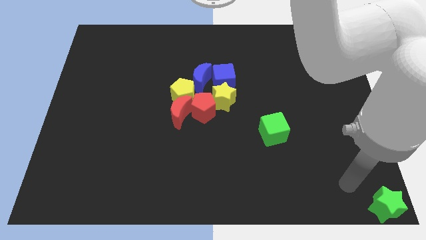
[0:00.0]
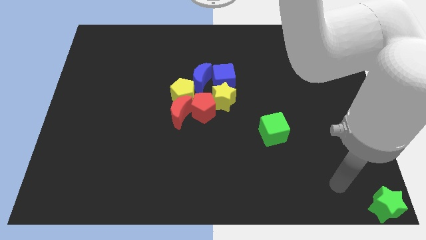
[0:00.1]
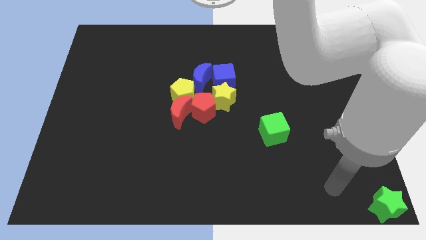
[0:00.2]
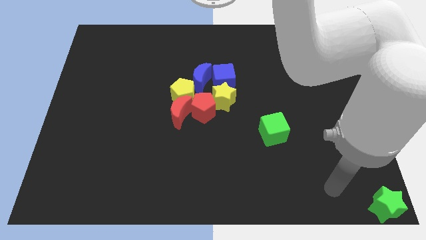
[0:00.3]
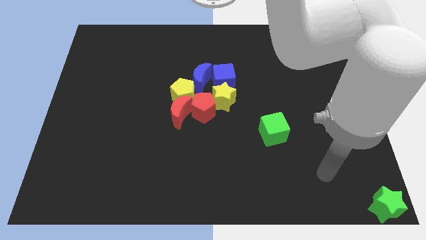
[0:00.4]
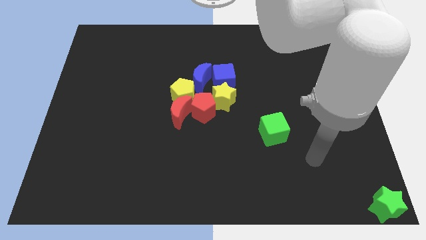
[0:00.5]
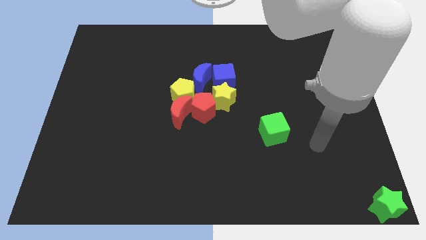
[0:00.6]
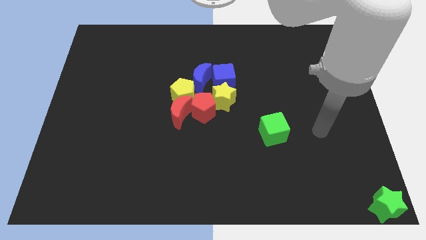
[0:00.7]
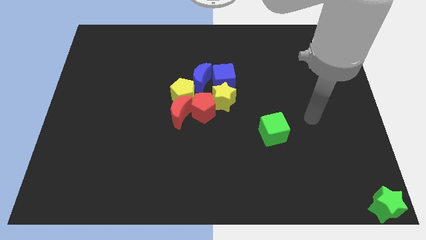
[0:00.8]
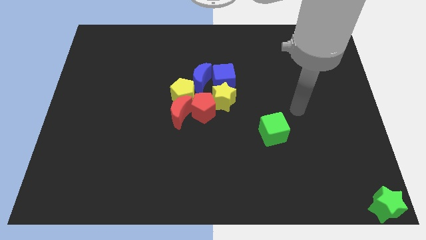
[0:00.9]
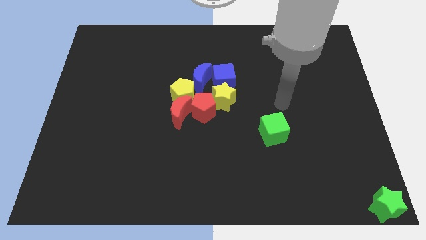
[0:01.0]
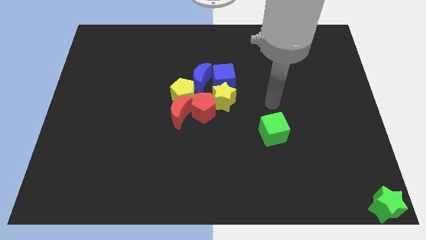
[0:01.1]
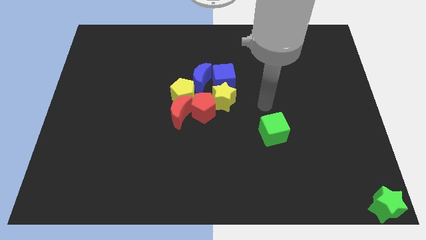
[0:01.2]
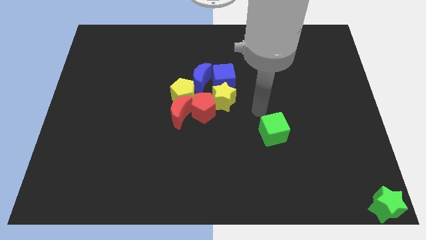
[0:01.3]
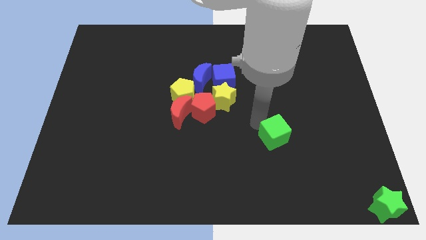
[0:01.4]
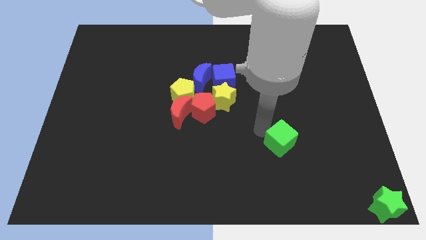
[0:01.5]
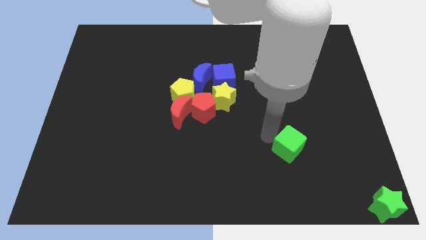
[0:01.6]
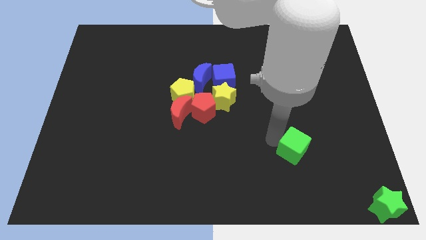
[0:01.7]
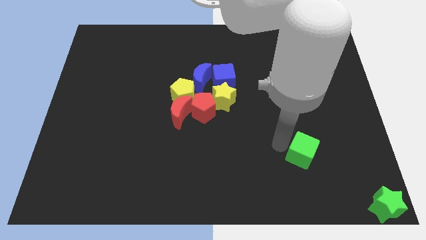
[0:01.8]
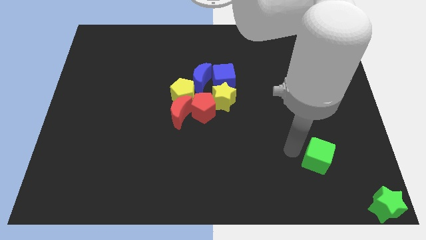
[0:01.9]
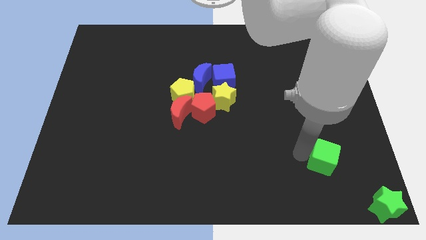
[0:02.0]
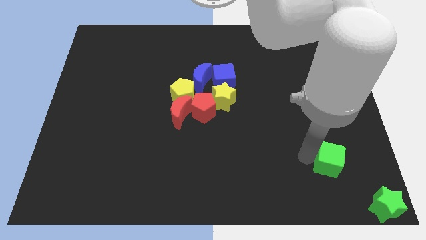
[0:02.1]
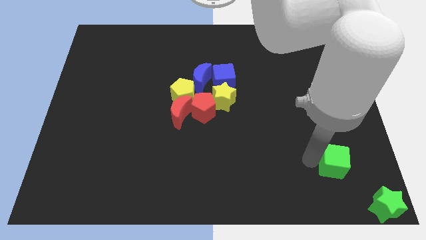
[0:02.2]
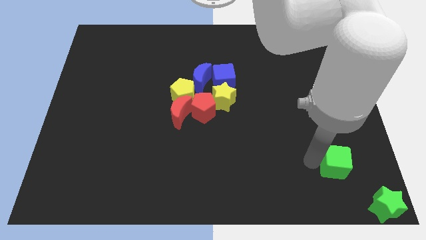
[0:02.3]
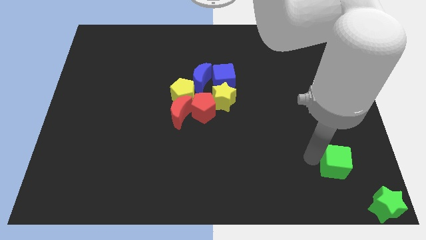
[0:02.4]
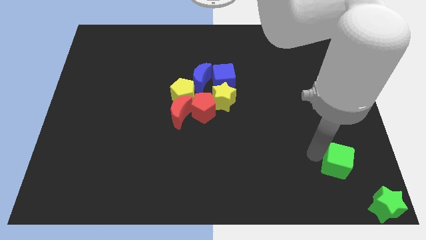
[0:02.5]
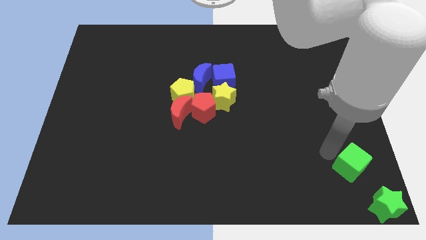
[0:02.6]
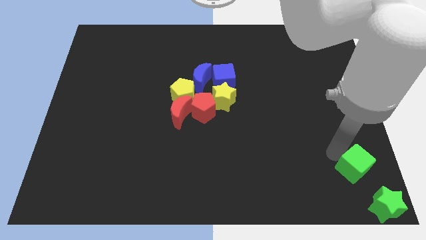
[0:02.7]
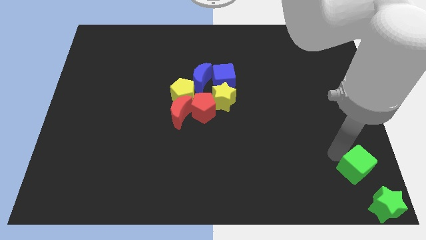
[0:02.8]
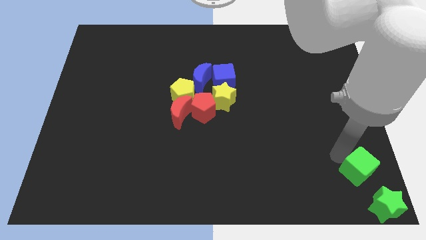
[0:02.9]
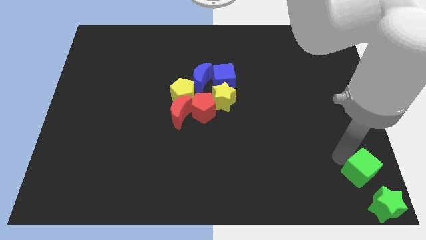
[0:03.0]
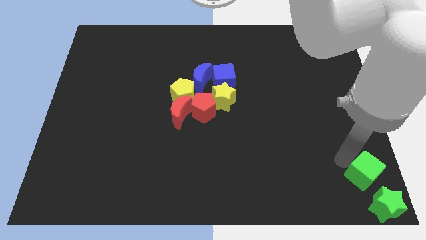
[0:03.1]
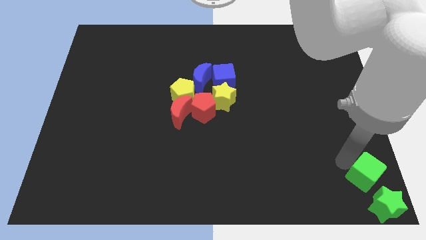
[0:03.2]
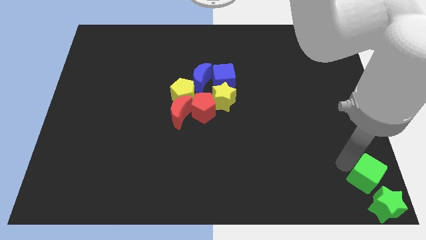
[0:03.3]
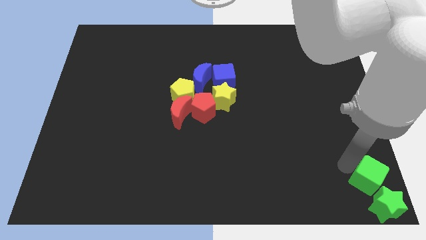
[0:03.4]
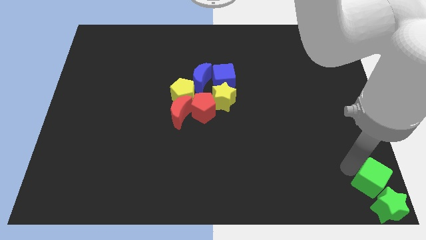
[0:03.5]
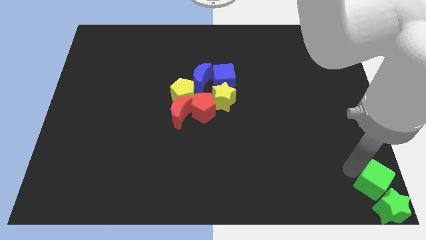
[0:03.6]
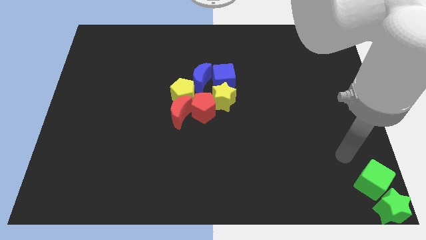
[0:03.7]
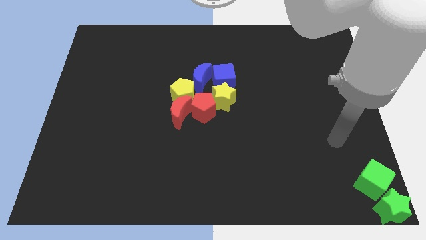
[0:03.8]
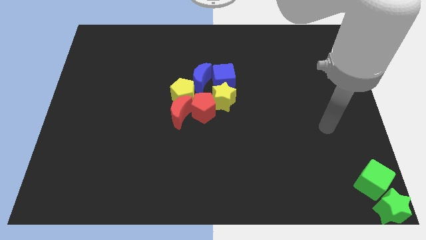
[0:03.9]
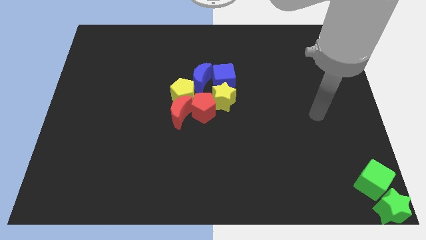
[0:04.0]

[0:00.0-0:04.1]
go and push the green cube in to the green star

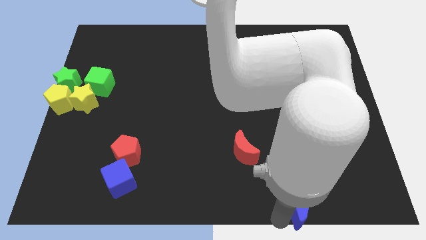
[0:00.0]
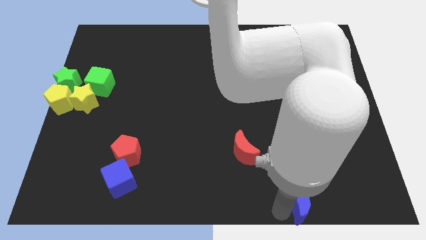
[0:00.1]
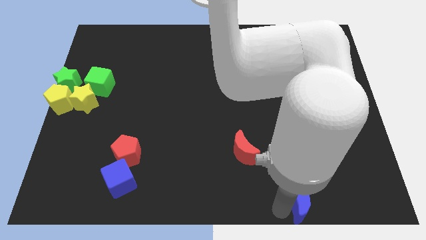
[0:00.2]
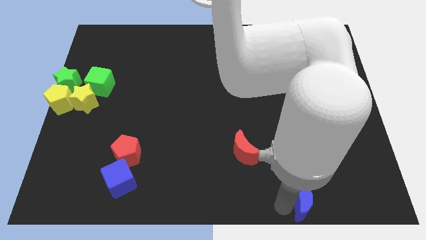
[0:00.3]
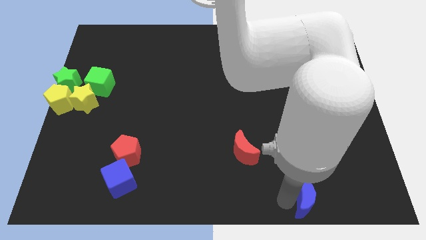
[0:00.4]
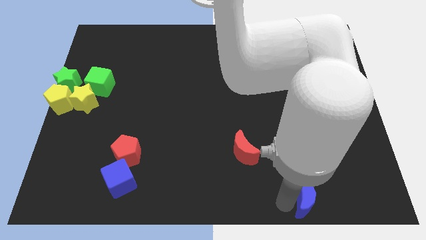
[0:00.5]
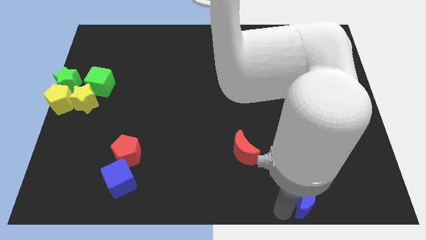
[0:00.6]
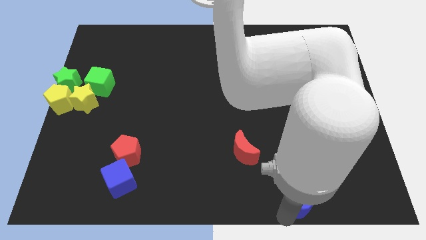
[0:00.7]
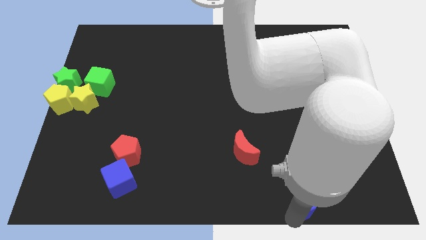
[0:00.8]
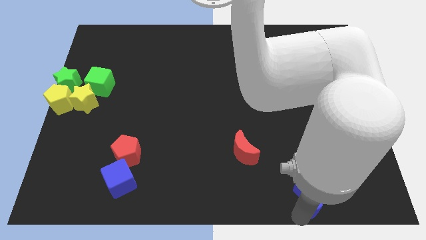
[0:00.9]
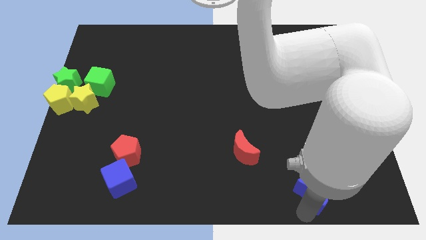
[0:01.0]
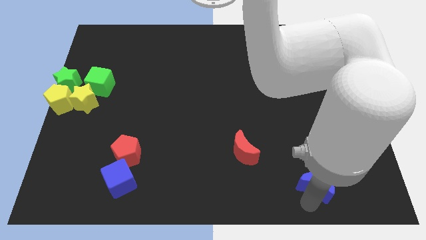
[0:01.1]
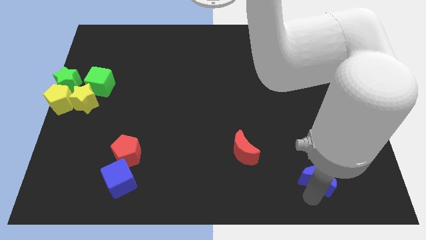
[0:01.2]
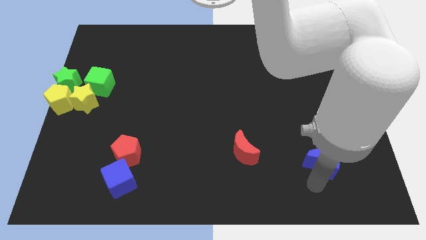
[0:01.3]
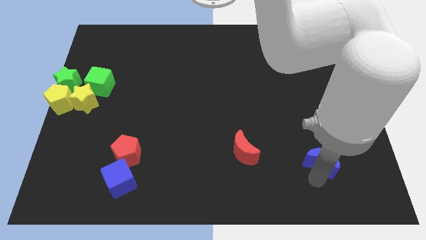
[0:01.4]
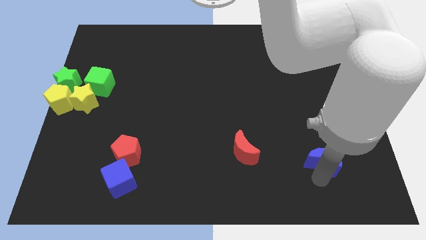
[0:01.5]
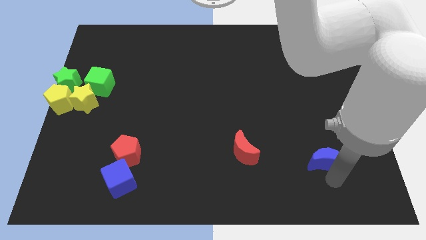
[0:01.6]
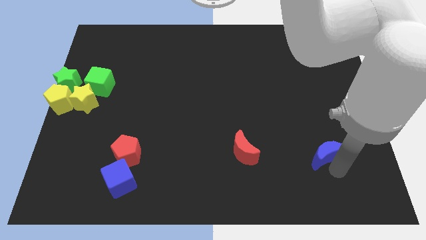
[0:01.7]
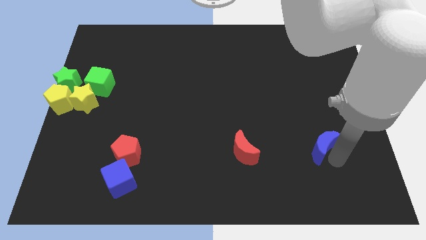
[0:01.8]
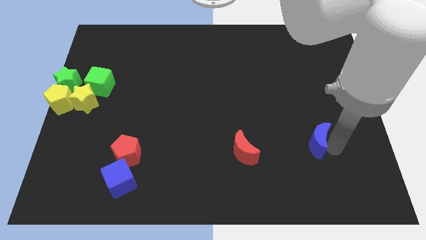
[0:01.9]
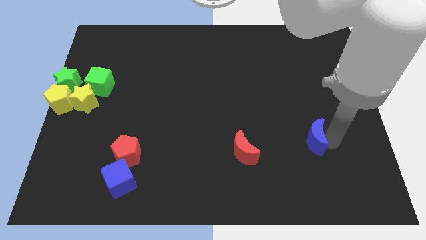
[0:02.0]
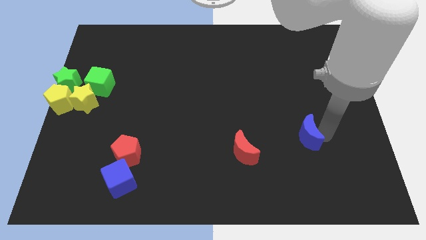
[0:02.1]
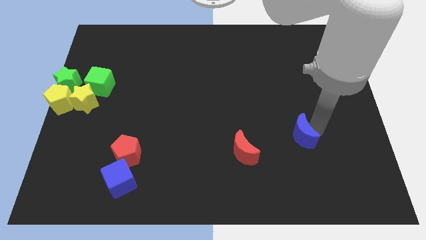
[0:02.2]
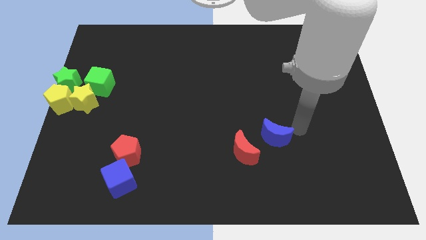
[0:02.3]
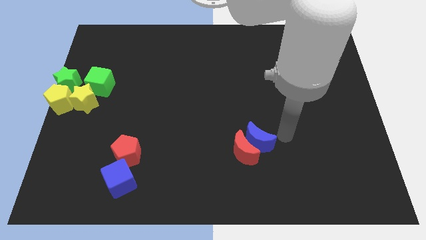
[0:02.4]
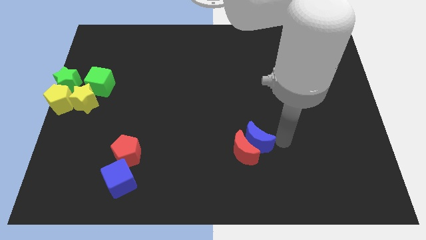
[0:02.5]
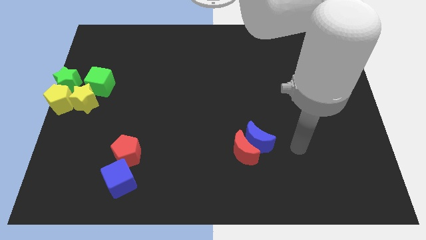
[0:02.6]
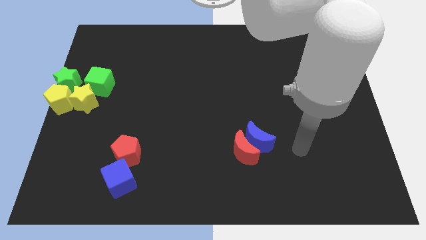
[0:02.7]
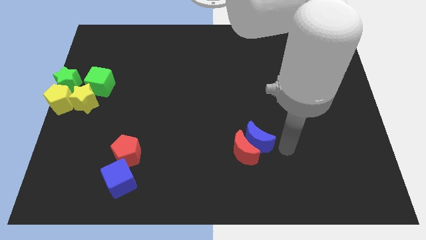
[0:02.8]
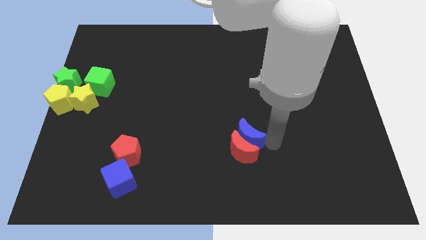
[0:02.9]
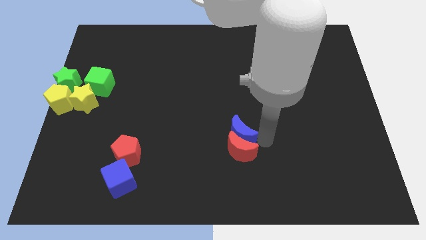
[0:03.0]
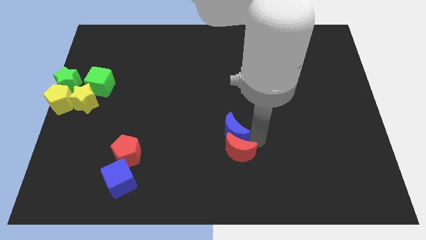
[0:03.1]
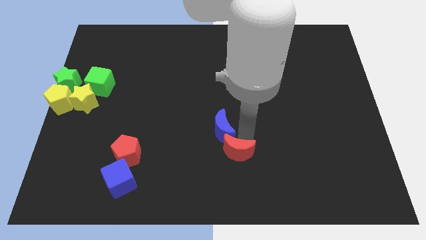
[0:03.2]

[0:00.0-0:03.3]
push the blue crescent above the red crescent

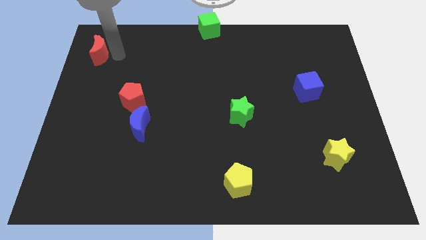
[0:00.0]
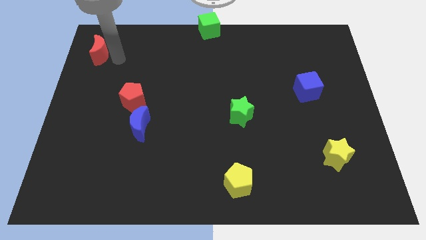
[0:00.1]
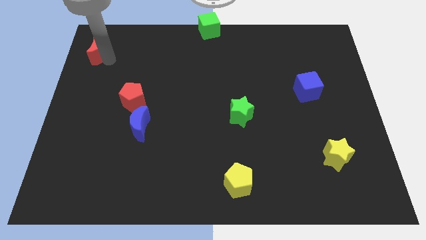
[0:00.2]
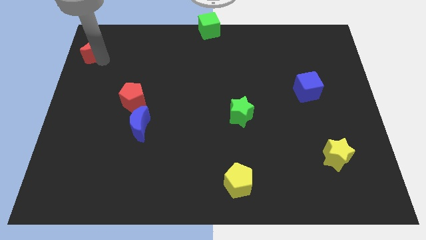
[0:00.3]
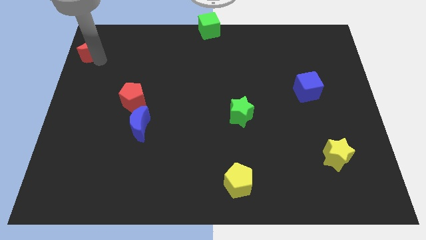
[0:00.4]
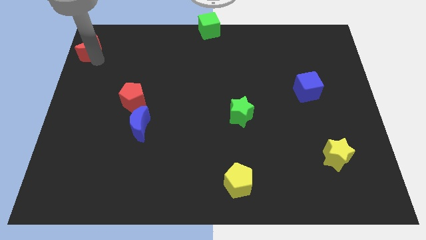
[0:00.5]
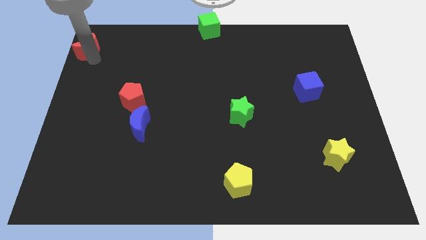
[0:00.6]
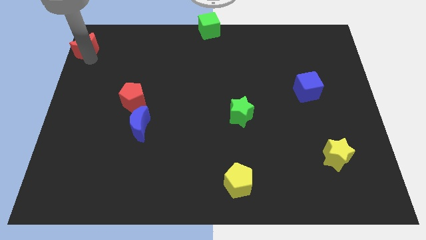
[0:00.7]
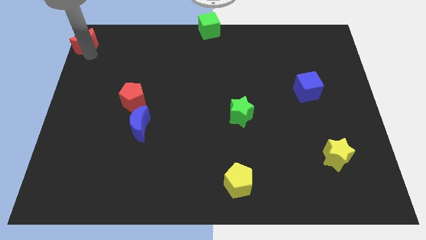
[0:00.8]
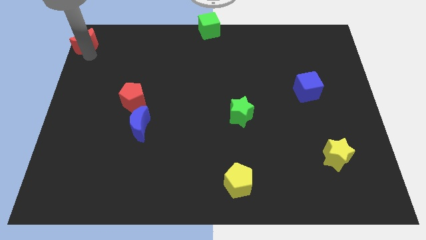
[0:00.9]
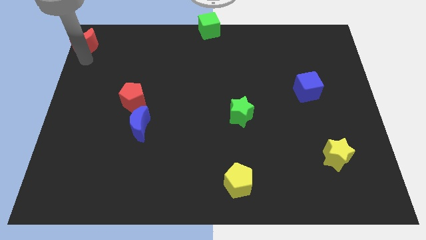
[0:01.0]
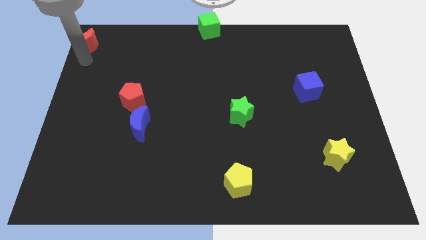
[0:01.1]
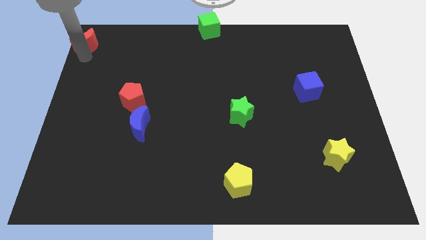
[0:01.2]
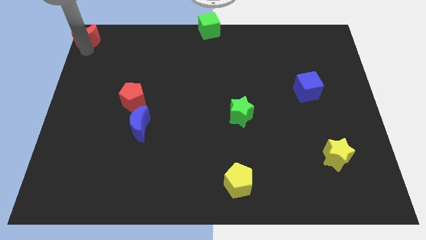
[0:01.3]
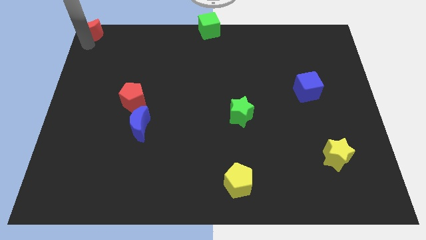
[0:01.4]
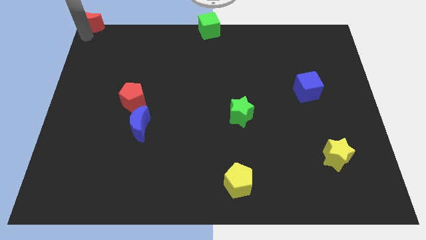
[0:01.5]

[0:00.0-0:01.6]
push the red crescent to the top left to the board
